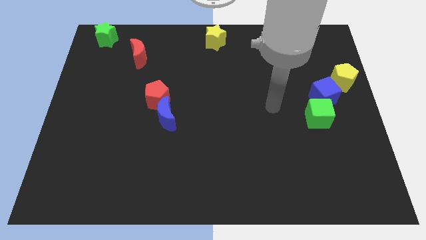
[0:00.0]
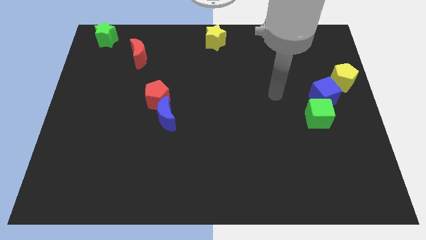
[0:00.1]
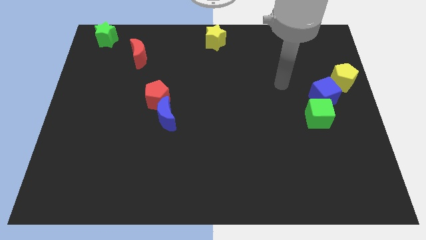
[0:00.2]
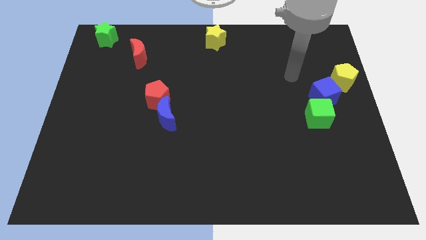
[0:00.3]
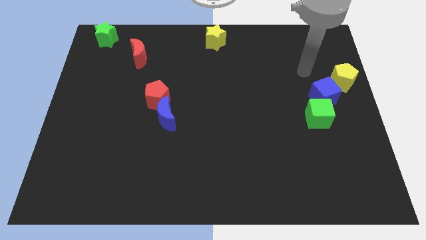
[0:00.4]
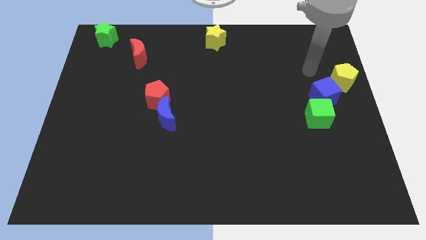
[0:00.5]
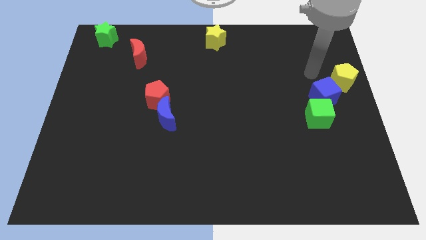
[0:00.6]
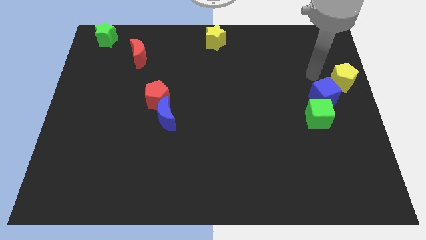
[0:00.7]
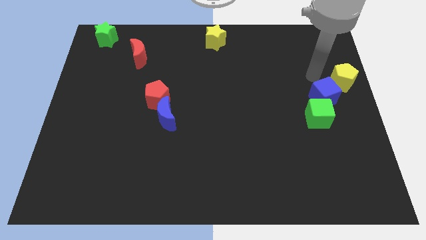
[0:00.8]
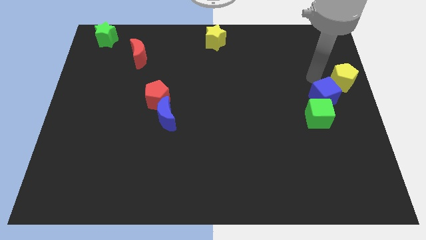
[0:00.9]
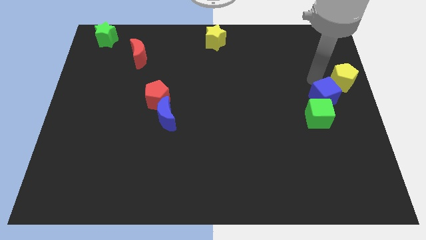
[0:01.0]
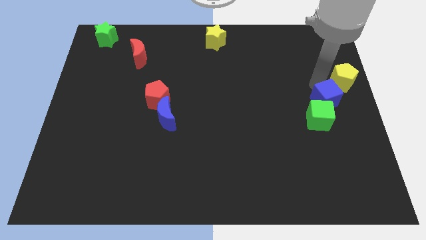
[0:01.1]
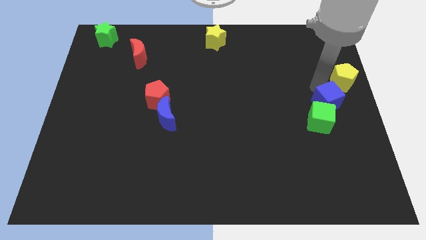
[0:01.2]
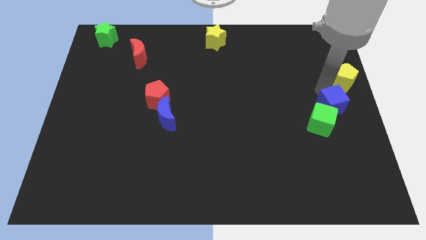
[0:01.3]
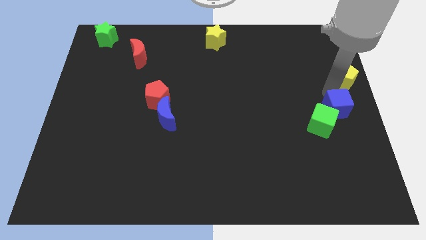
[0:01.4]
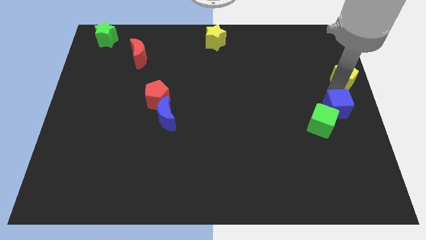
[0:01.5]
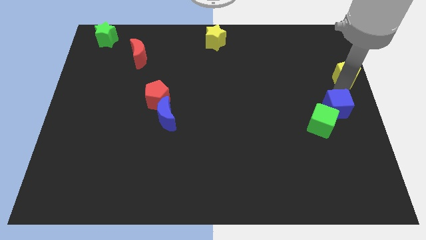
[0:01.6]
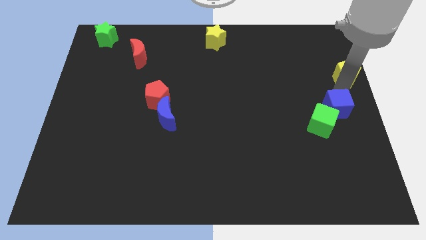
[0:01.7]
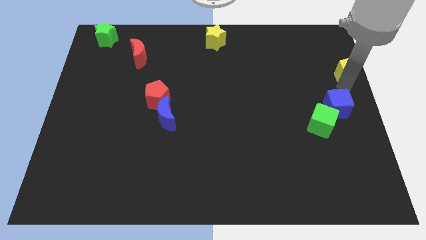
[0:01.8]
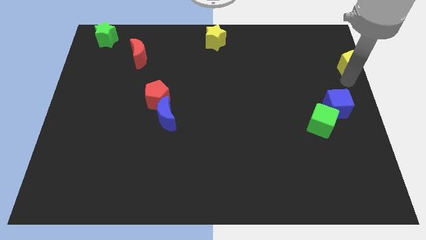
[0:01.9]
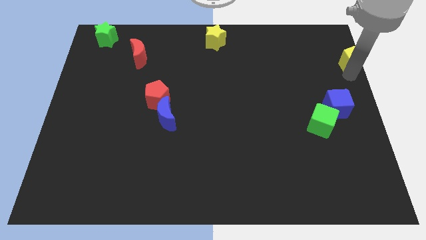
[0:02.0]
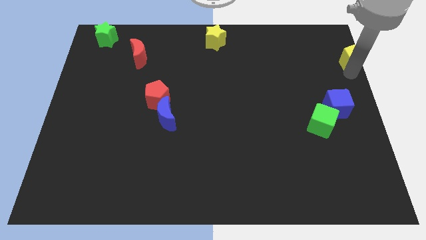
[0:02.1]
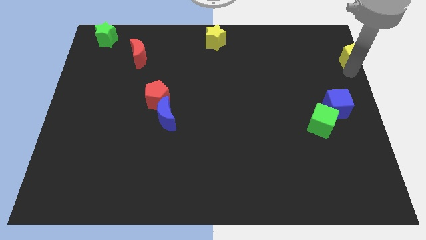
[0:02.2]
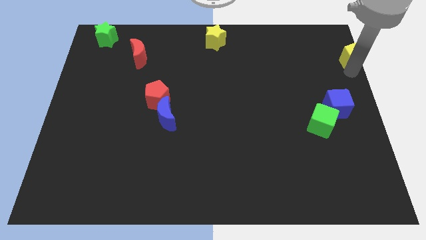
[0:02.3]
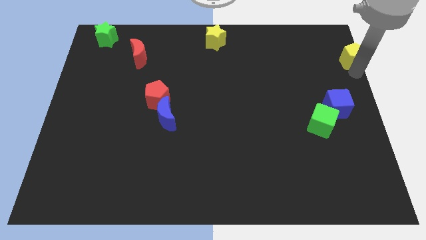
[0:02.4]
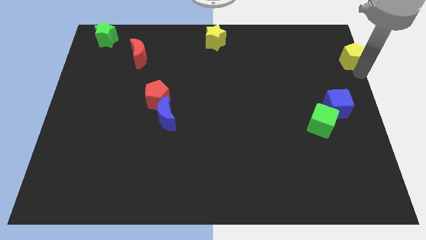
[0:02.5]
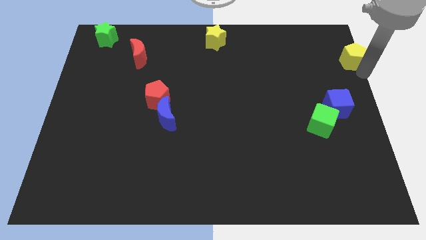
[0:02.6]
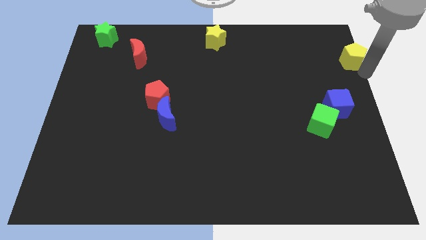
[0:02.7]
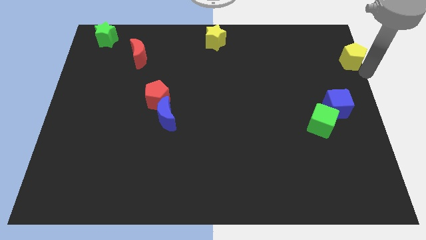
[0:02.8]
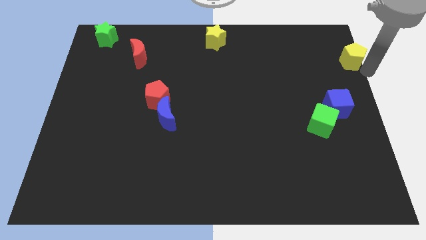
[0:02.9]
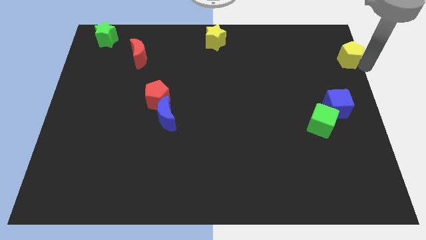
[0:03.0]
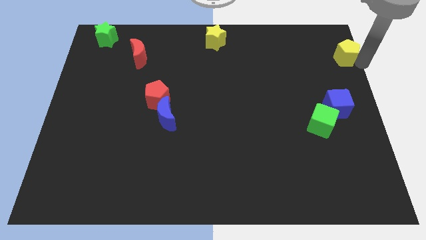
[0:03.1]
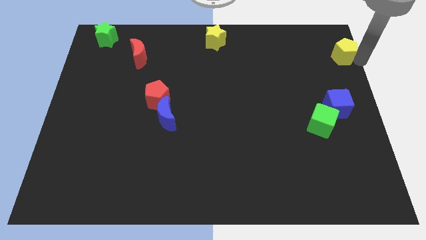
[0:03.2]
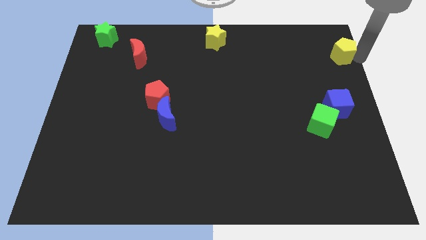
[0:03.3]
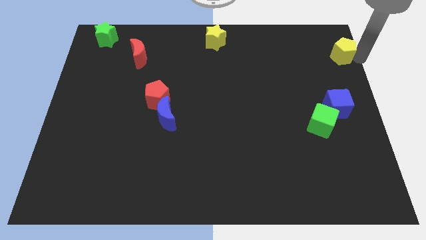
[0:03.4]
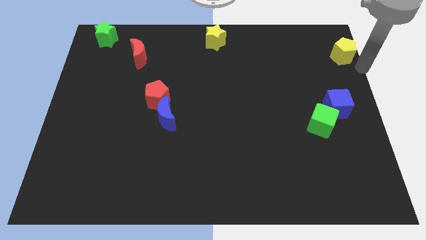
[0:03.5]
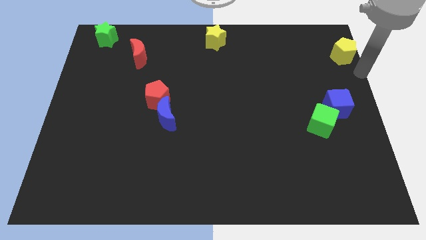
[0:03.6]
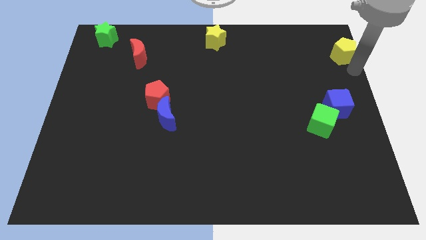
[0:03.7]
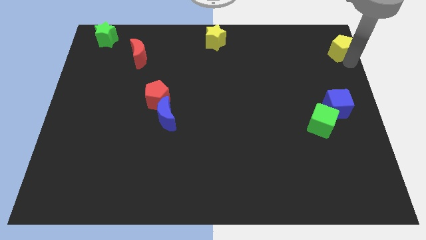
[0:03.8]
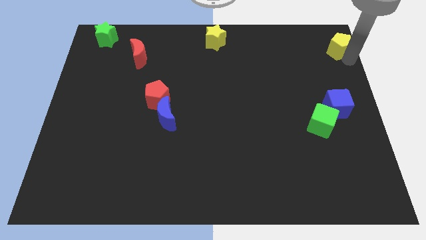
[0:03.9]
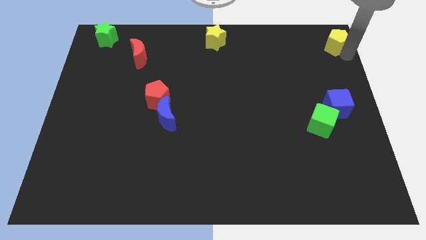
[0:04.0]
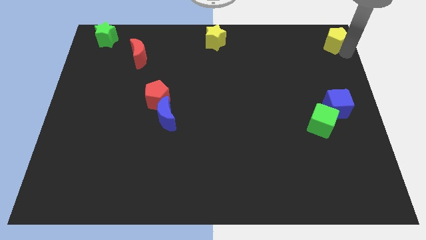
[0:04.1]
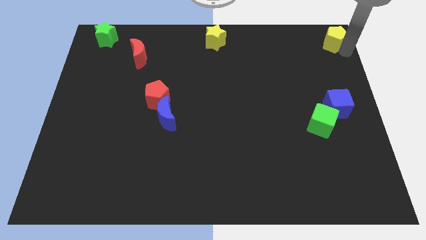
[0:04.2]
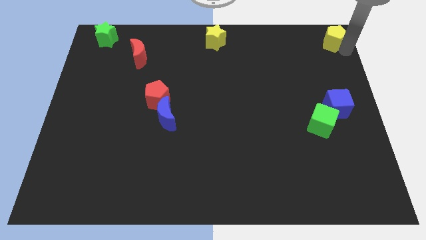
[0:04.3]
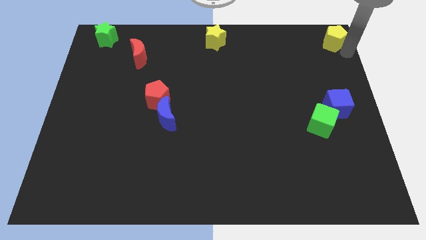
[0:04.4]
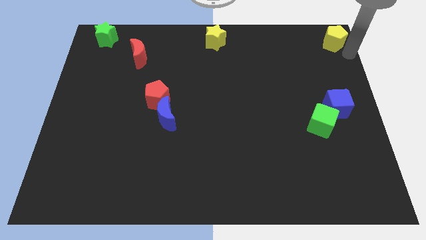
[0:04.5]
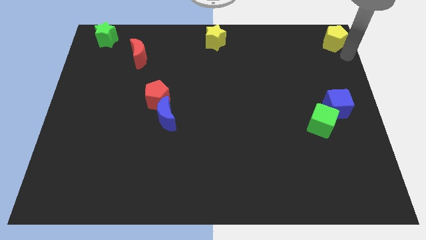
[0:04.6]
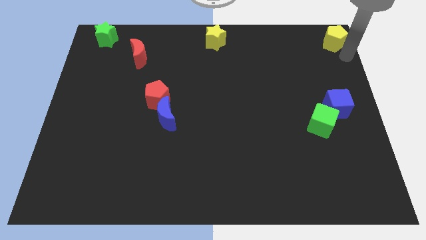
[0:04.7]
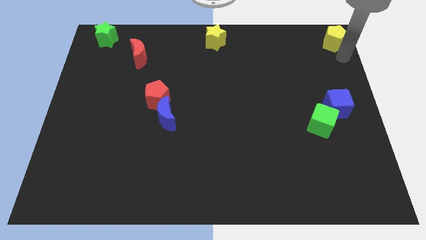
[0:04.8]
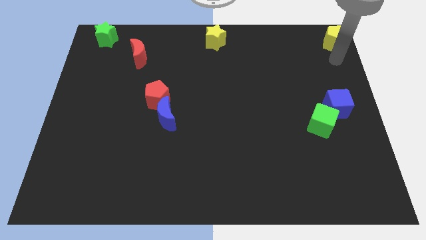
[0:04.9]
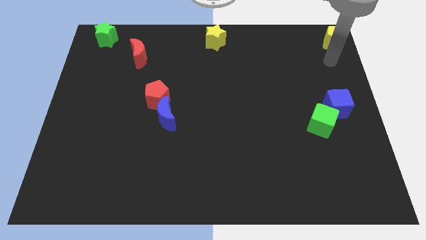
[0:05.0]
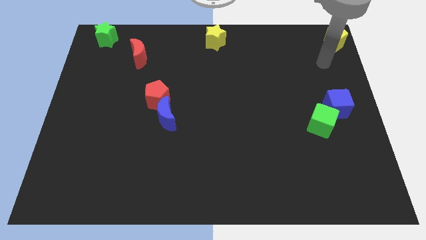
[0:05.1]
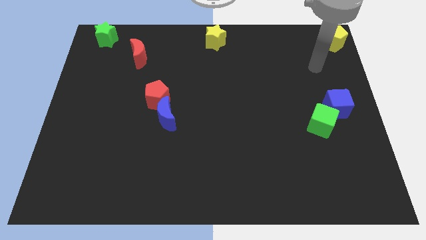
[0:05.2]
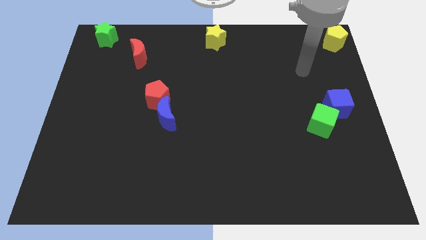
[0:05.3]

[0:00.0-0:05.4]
place the yellow pentagon at the top right corner of the board

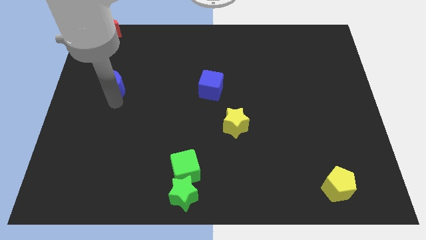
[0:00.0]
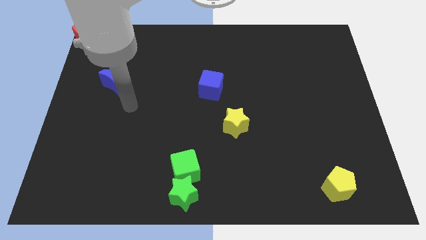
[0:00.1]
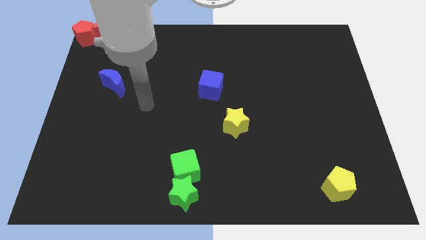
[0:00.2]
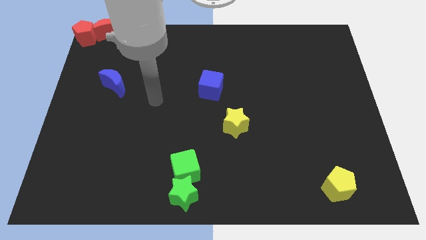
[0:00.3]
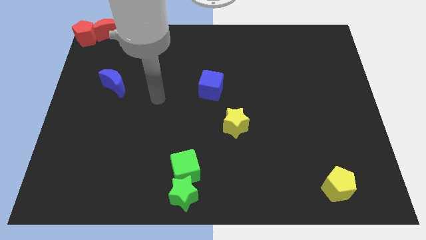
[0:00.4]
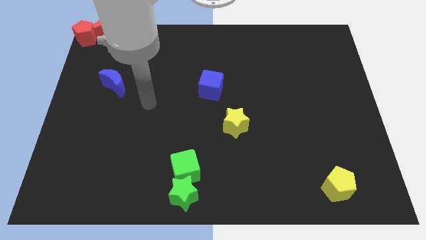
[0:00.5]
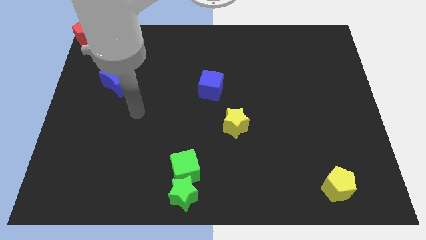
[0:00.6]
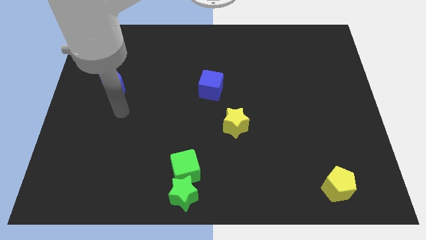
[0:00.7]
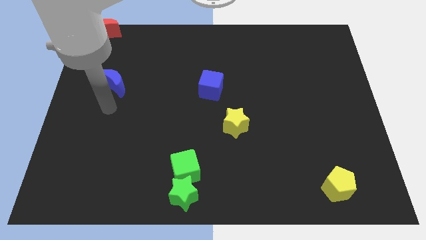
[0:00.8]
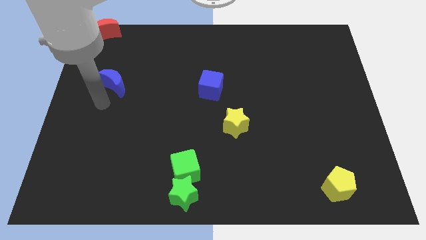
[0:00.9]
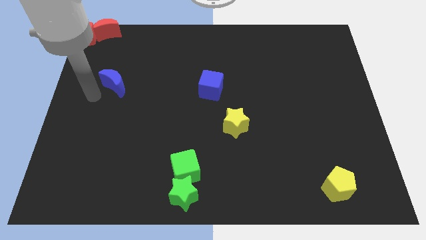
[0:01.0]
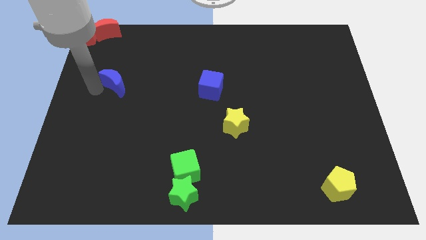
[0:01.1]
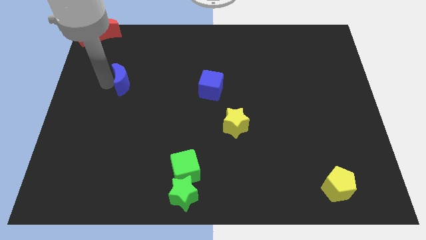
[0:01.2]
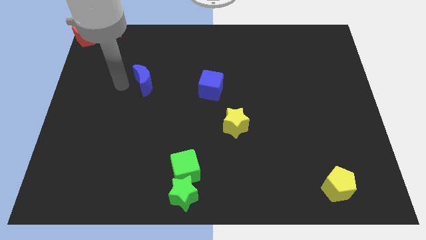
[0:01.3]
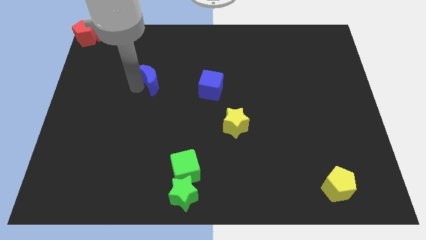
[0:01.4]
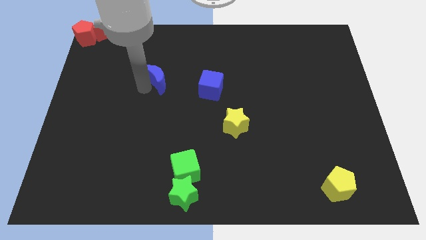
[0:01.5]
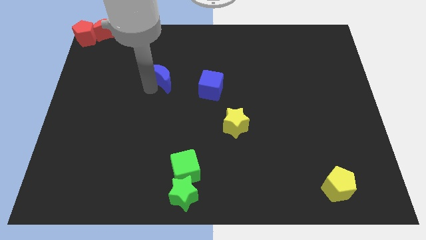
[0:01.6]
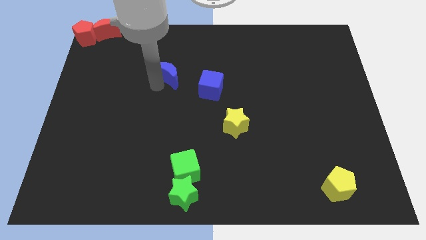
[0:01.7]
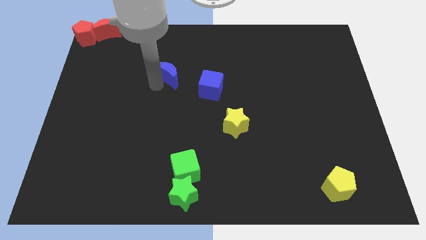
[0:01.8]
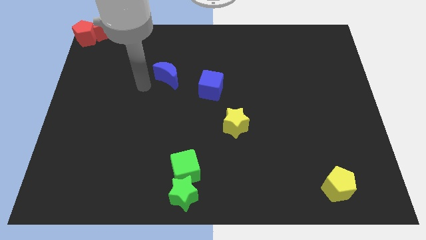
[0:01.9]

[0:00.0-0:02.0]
push the blue moon towards the center

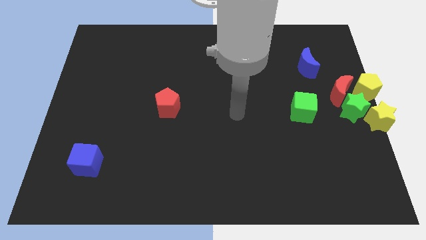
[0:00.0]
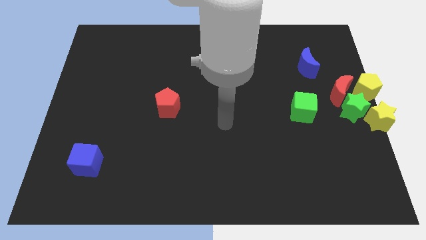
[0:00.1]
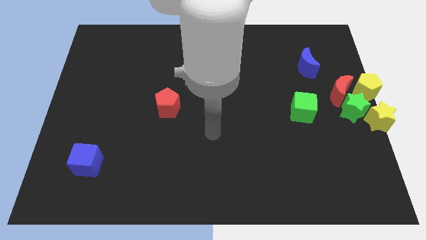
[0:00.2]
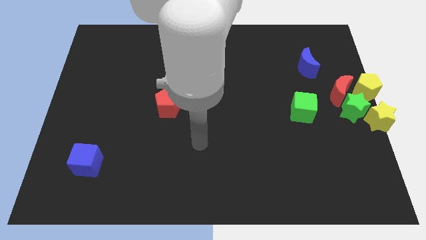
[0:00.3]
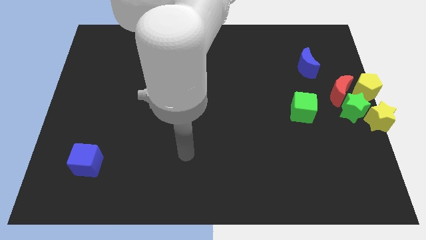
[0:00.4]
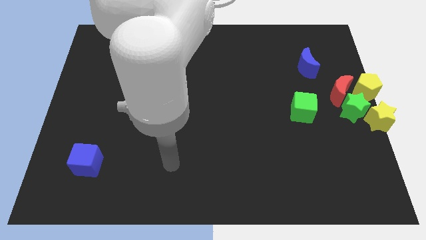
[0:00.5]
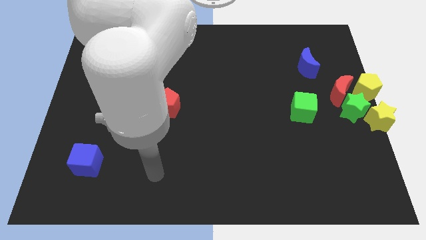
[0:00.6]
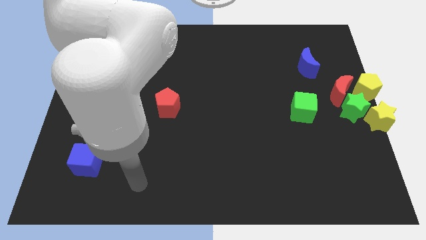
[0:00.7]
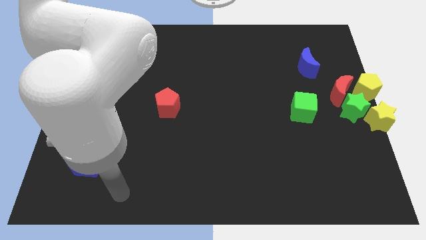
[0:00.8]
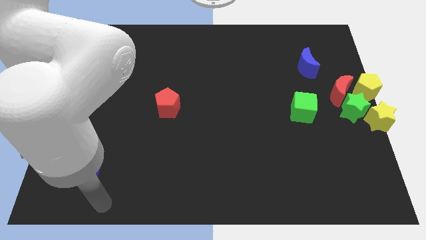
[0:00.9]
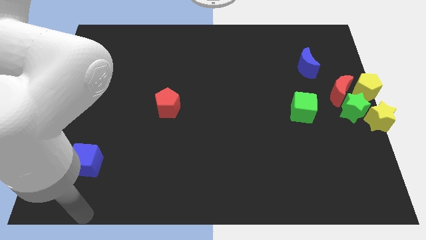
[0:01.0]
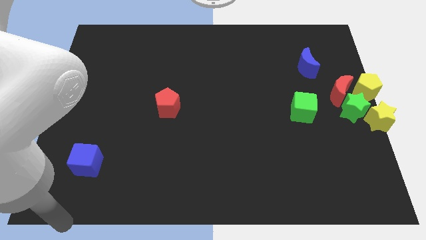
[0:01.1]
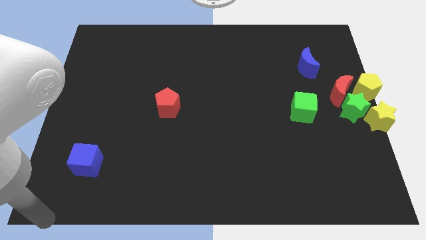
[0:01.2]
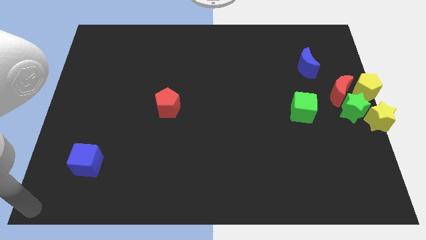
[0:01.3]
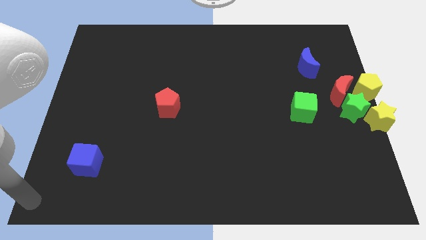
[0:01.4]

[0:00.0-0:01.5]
place your hand at the bottom left corner
